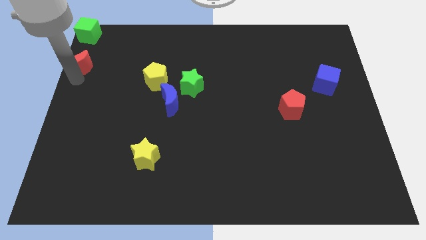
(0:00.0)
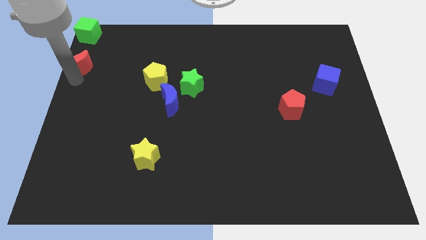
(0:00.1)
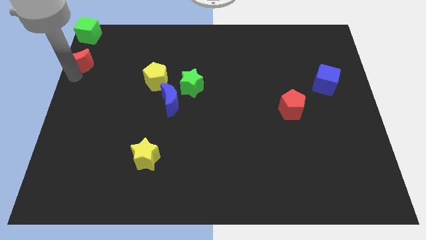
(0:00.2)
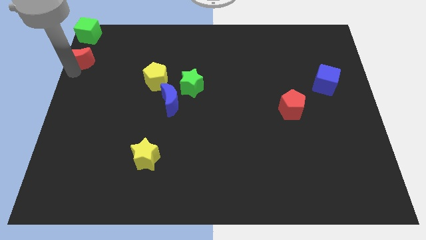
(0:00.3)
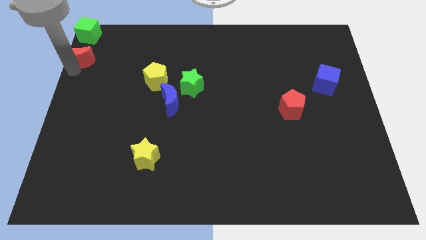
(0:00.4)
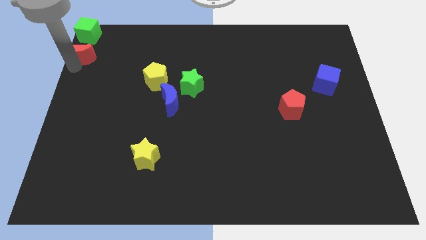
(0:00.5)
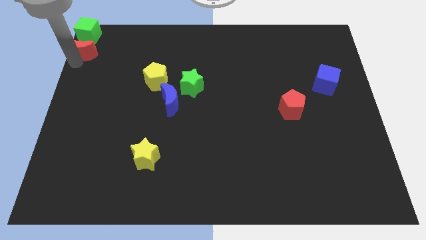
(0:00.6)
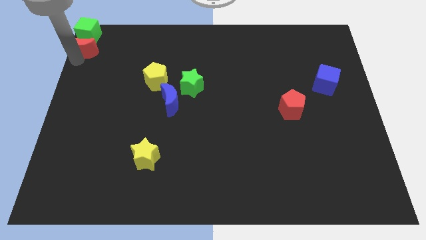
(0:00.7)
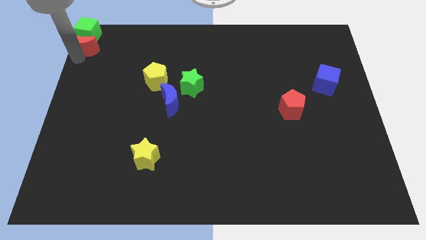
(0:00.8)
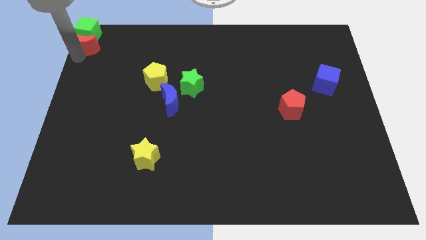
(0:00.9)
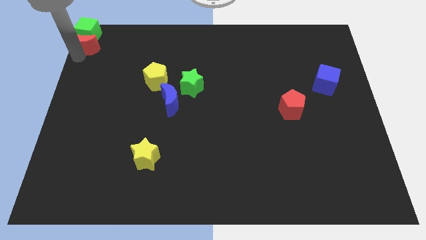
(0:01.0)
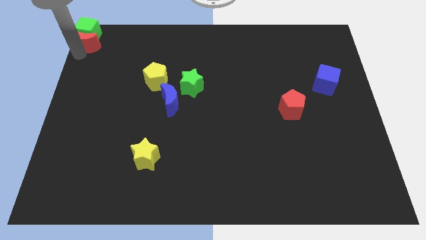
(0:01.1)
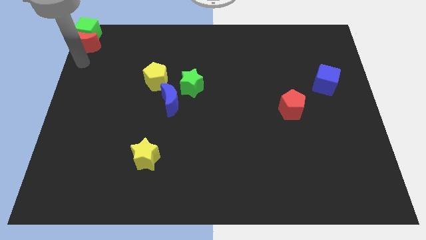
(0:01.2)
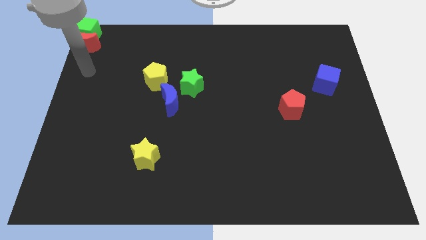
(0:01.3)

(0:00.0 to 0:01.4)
push the red moon into the green cube

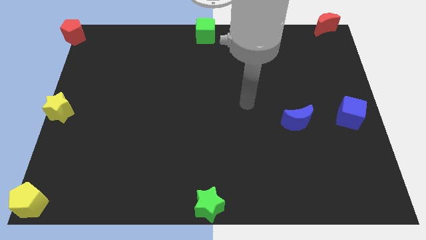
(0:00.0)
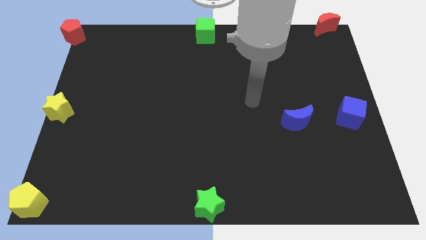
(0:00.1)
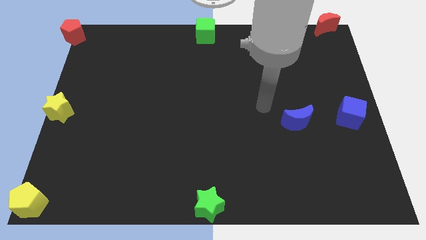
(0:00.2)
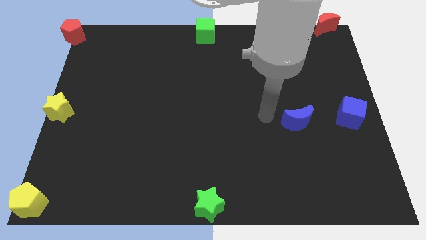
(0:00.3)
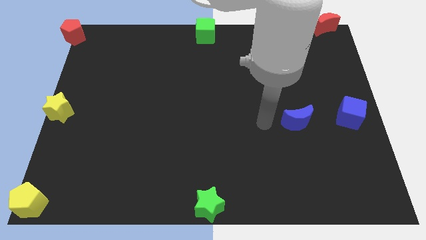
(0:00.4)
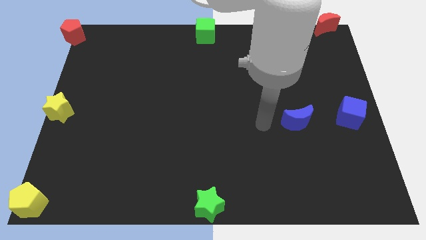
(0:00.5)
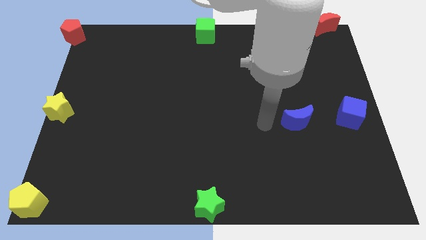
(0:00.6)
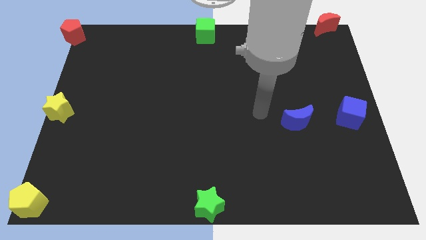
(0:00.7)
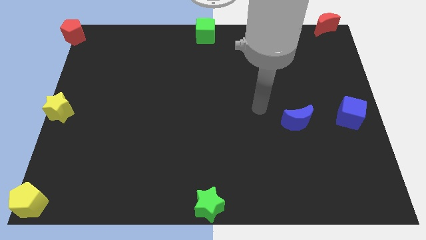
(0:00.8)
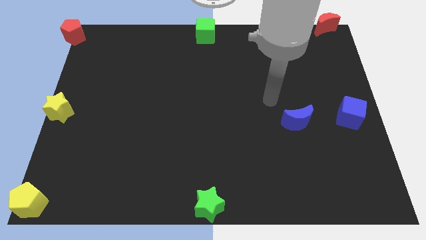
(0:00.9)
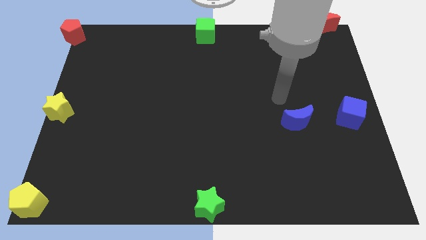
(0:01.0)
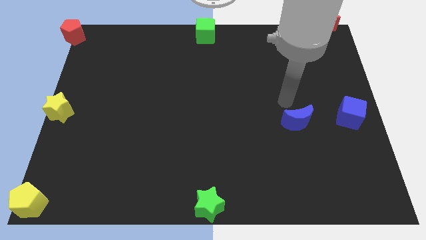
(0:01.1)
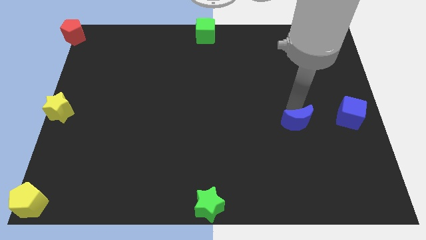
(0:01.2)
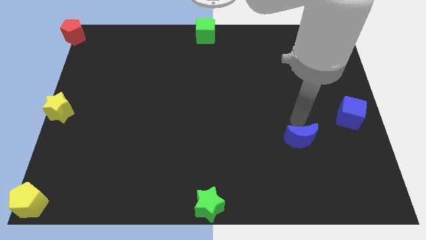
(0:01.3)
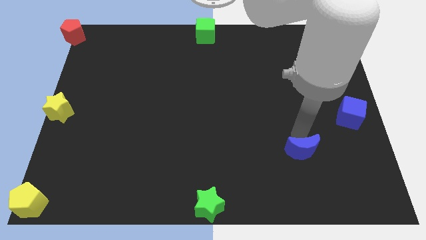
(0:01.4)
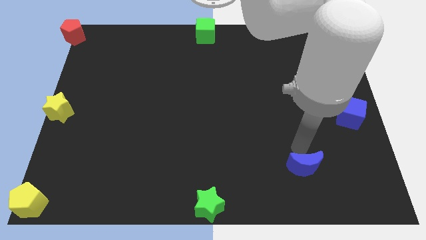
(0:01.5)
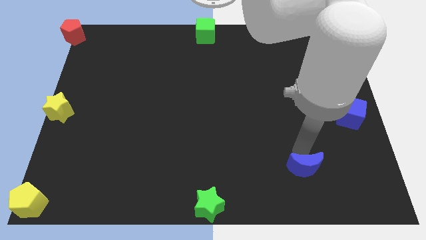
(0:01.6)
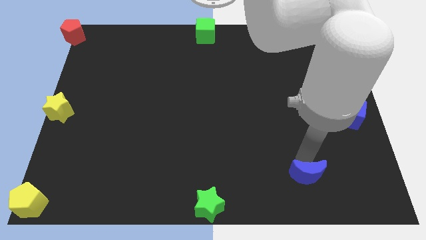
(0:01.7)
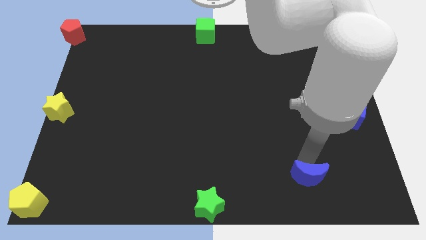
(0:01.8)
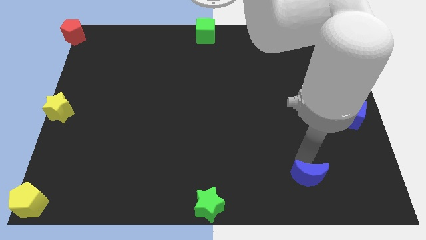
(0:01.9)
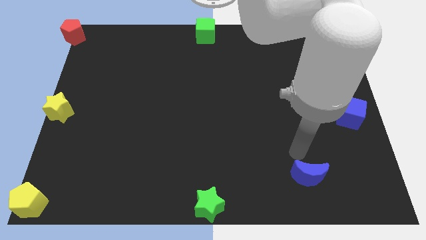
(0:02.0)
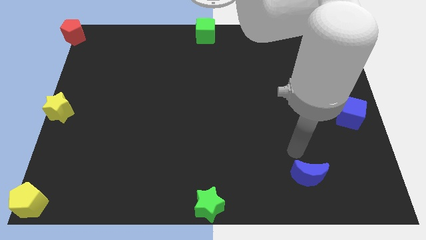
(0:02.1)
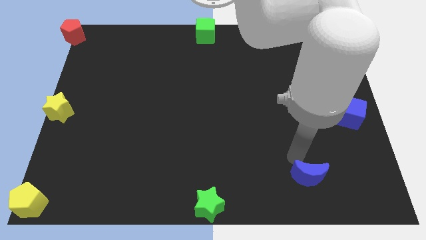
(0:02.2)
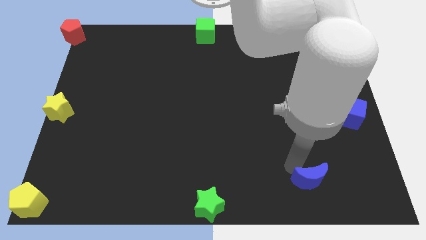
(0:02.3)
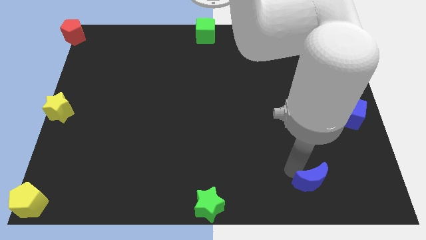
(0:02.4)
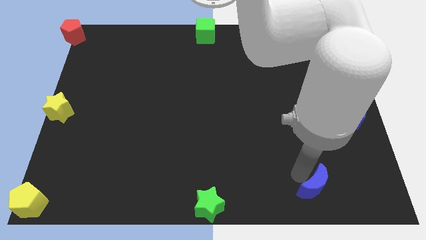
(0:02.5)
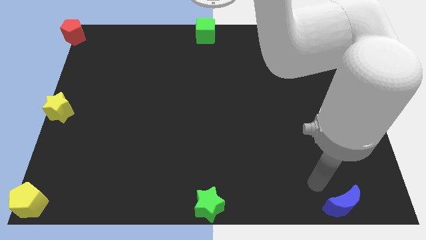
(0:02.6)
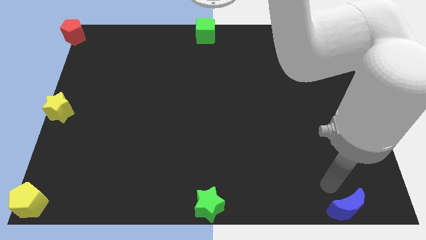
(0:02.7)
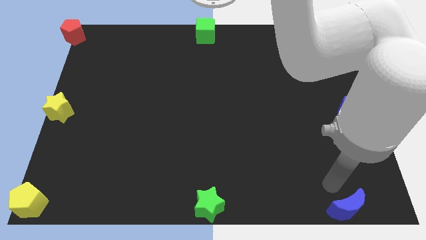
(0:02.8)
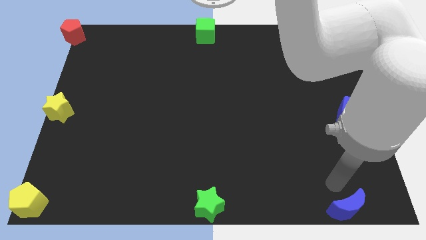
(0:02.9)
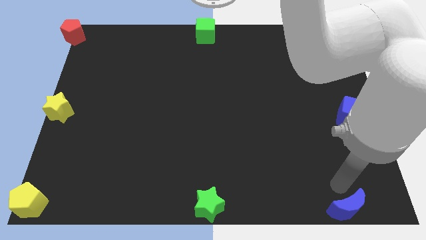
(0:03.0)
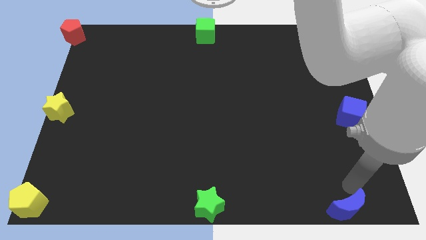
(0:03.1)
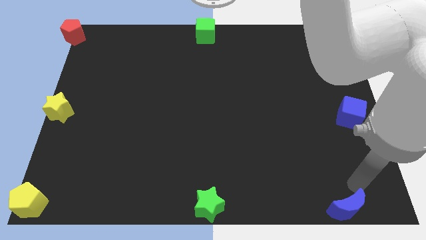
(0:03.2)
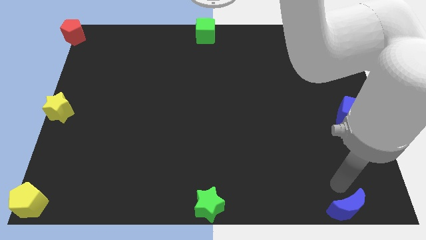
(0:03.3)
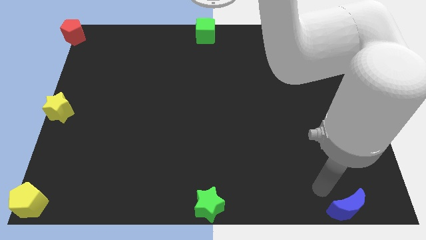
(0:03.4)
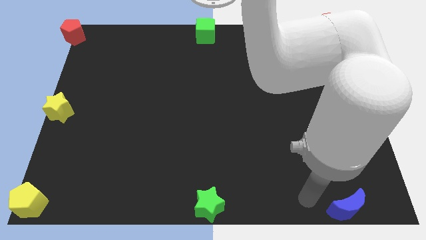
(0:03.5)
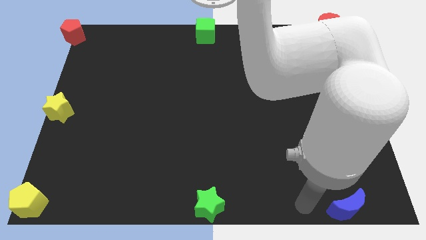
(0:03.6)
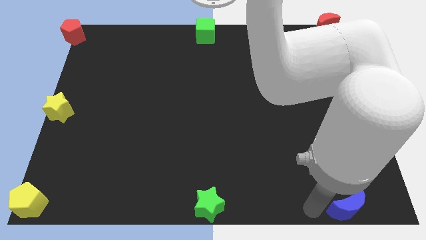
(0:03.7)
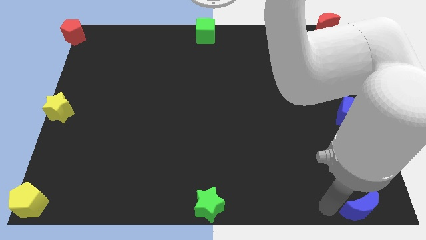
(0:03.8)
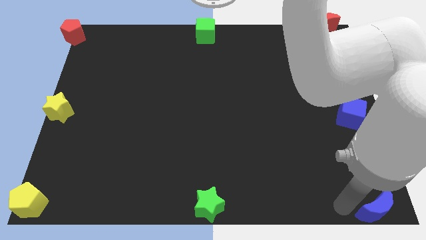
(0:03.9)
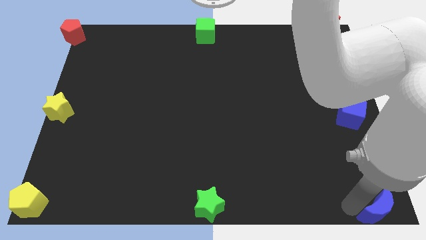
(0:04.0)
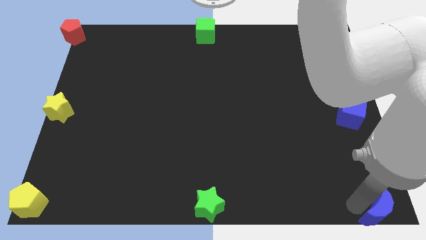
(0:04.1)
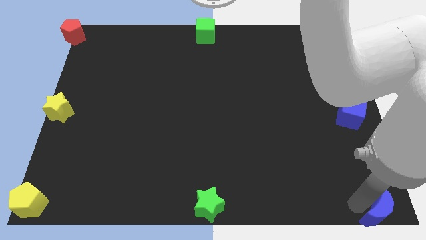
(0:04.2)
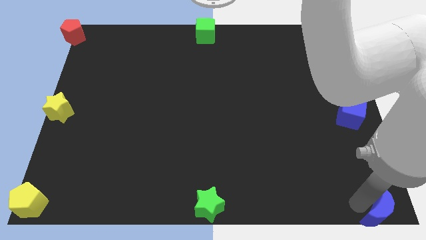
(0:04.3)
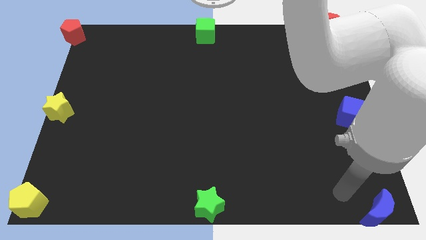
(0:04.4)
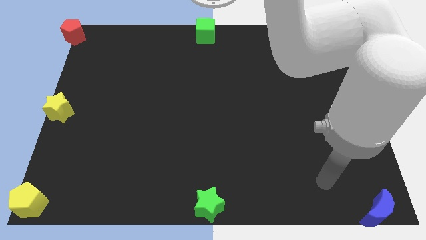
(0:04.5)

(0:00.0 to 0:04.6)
push the blue crescent to the bottom right corner of the board

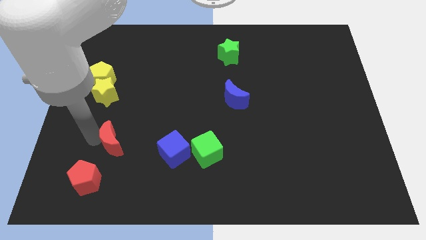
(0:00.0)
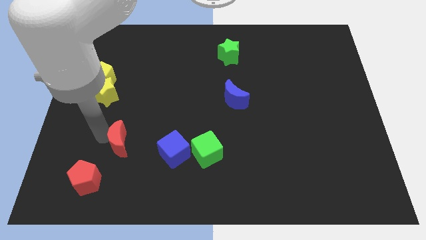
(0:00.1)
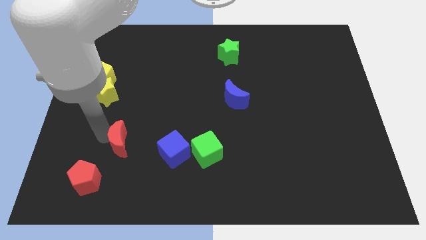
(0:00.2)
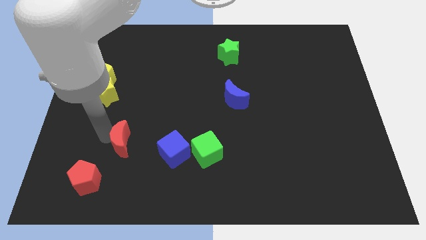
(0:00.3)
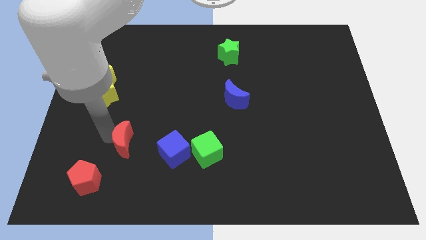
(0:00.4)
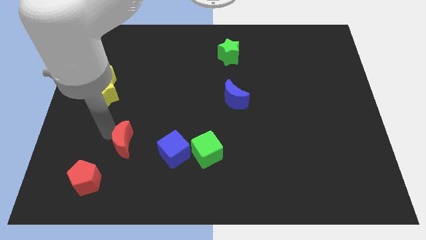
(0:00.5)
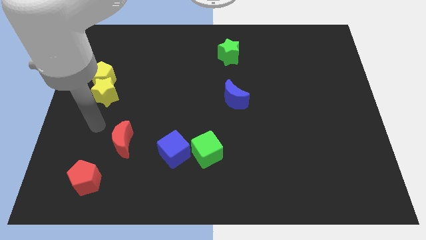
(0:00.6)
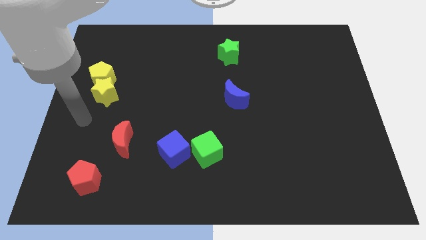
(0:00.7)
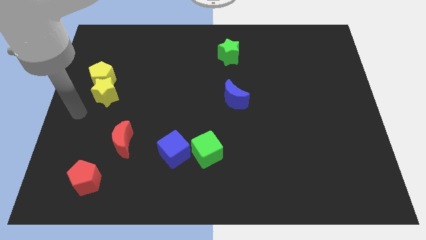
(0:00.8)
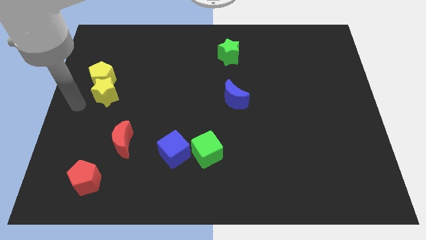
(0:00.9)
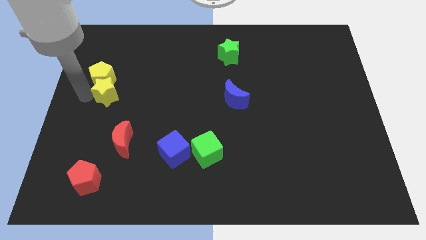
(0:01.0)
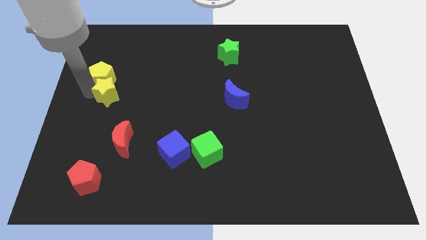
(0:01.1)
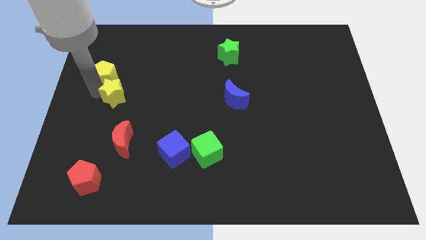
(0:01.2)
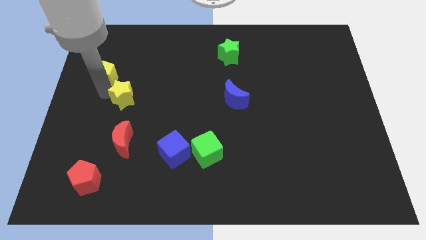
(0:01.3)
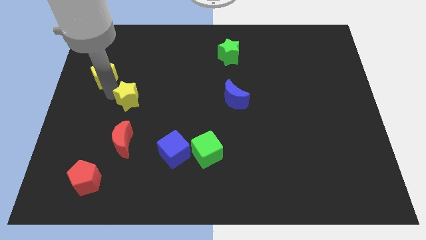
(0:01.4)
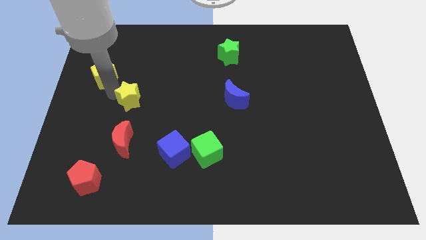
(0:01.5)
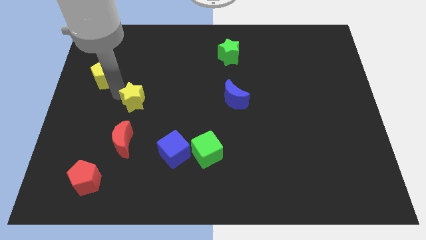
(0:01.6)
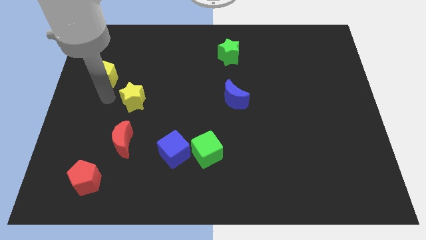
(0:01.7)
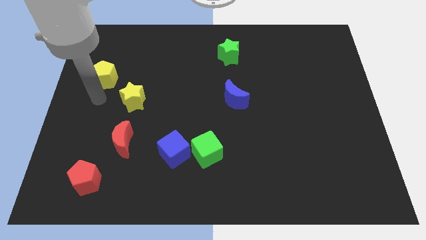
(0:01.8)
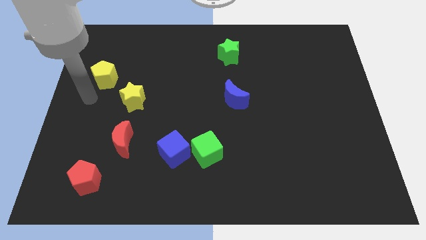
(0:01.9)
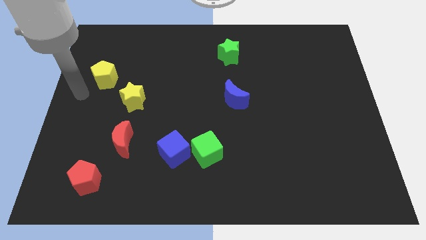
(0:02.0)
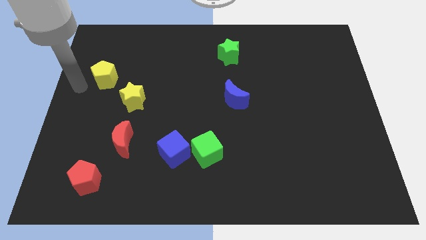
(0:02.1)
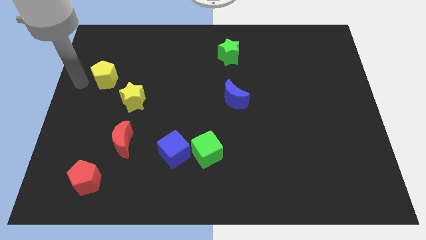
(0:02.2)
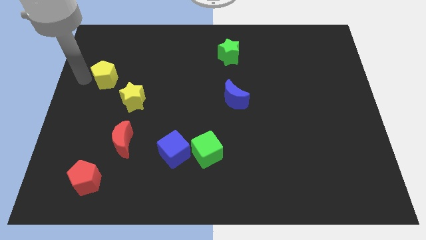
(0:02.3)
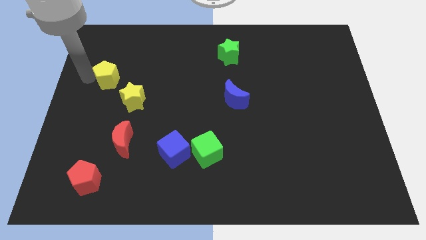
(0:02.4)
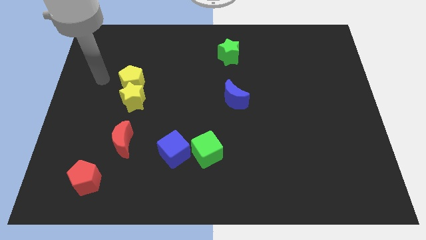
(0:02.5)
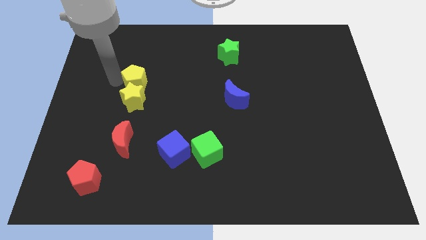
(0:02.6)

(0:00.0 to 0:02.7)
push yellow blocks above red moon
